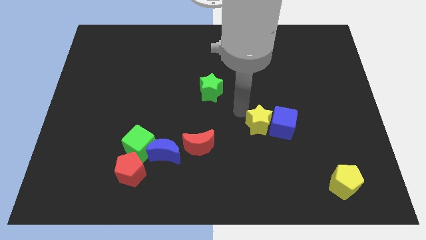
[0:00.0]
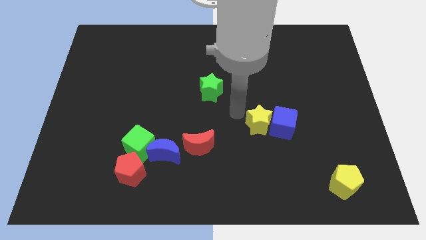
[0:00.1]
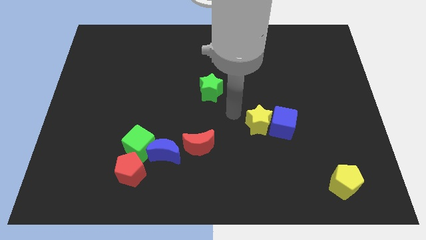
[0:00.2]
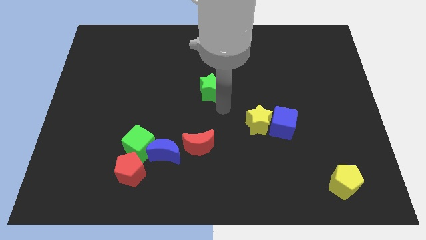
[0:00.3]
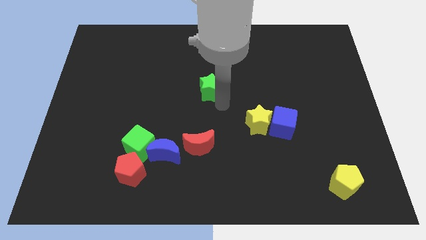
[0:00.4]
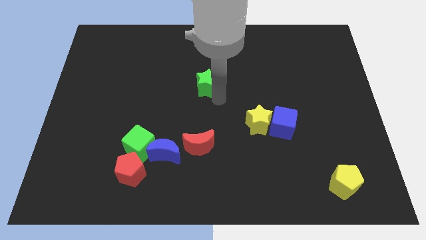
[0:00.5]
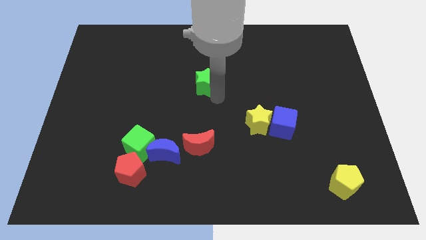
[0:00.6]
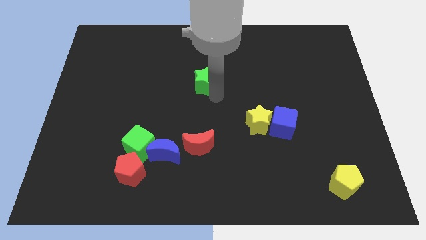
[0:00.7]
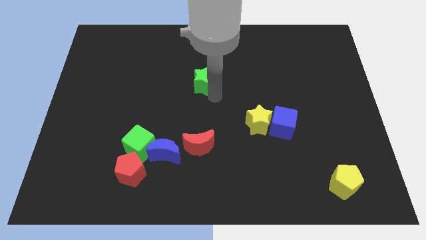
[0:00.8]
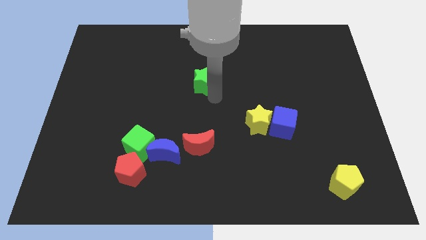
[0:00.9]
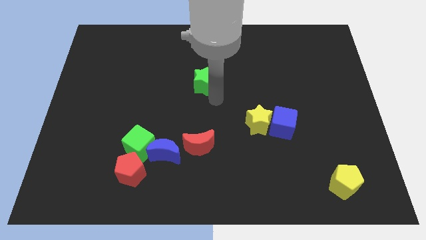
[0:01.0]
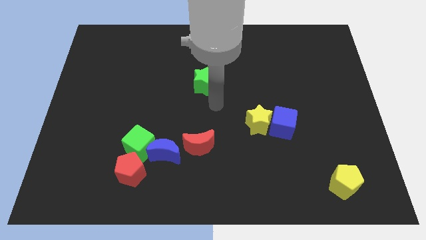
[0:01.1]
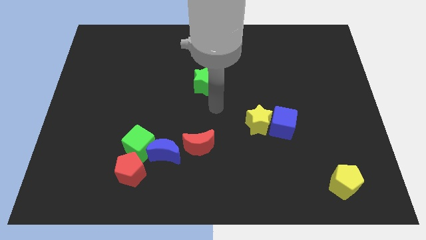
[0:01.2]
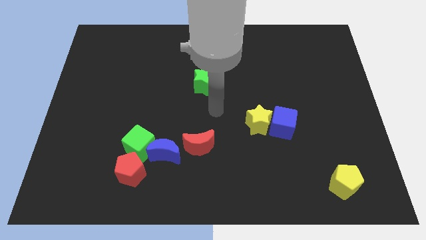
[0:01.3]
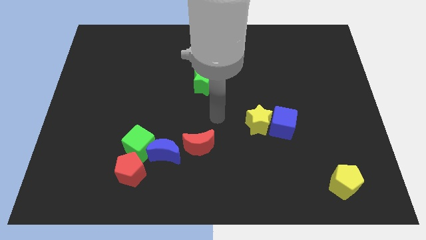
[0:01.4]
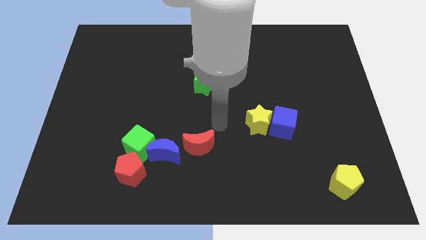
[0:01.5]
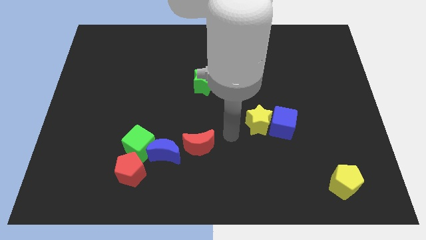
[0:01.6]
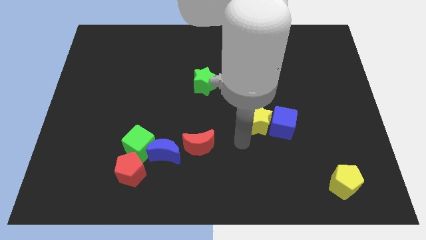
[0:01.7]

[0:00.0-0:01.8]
push the green star slightly to the top side of the board

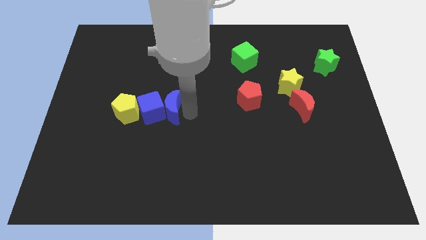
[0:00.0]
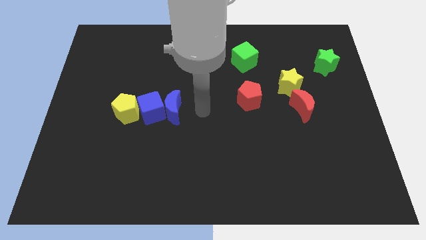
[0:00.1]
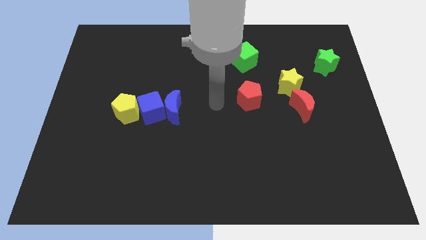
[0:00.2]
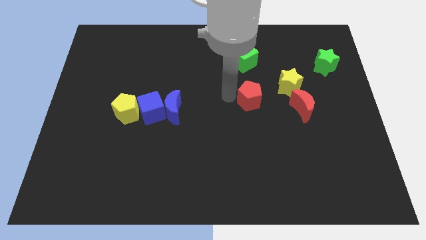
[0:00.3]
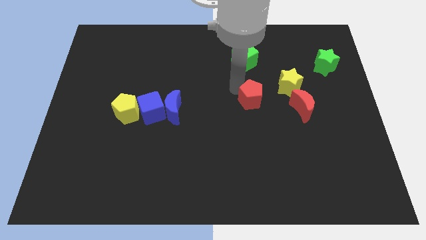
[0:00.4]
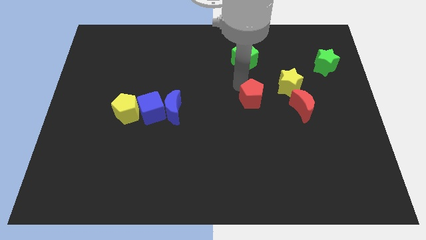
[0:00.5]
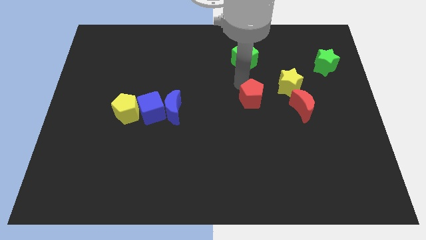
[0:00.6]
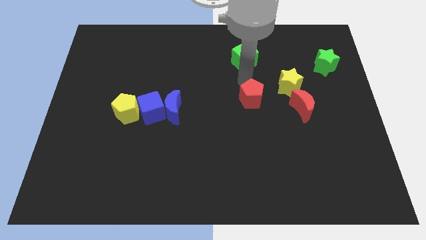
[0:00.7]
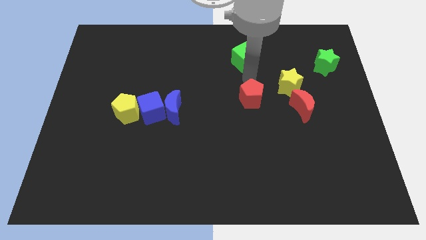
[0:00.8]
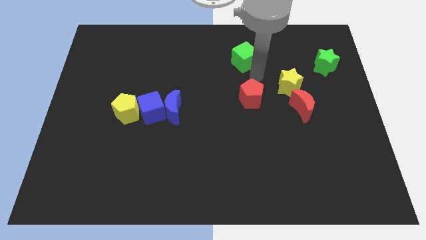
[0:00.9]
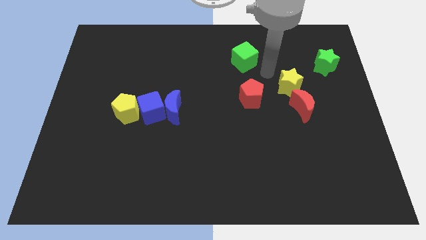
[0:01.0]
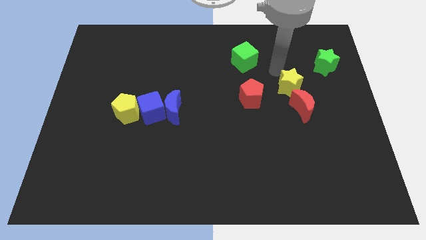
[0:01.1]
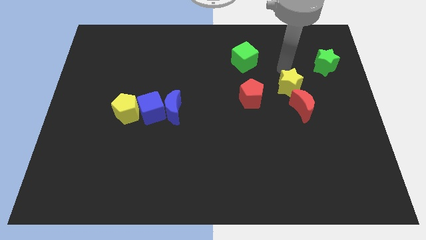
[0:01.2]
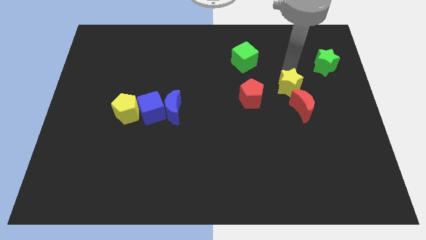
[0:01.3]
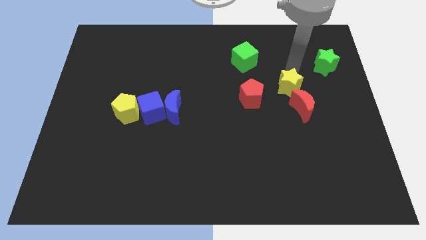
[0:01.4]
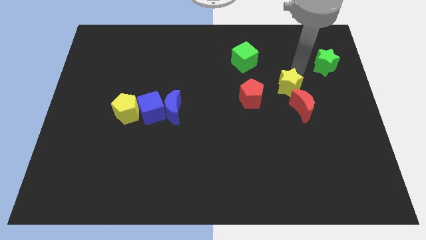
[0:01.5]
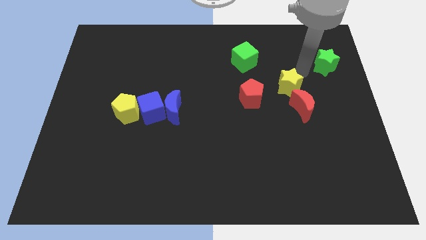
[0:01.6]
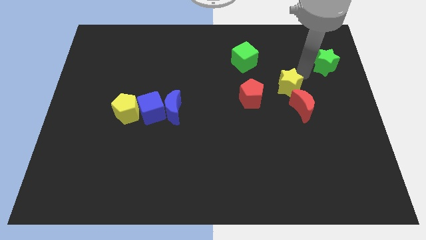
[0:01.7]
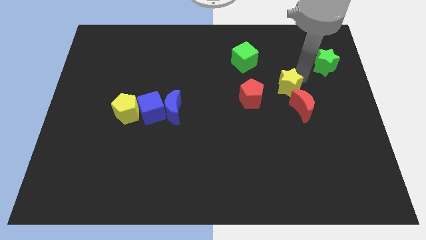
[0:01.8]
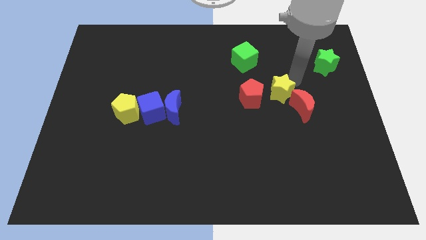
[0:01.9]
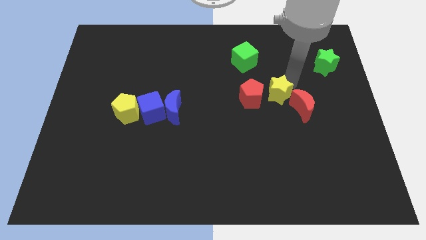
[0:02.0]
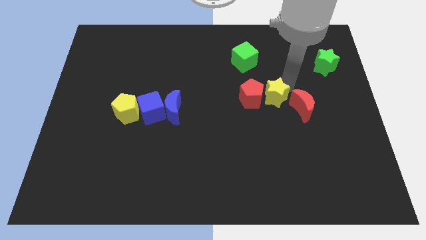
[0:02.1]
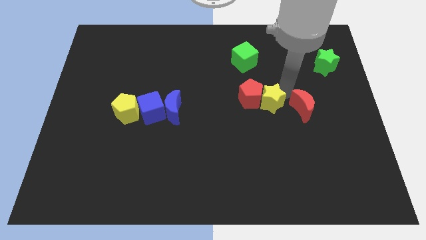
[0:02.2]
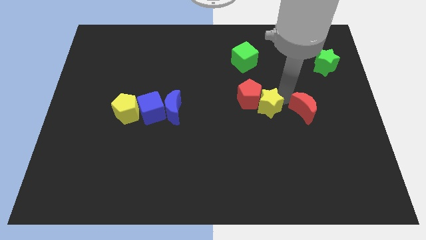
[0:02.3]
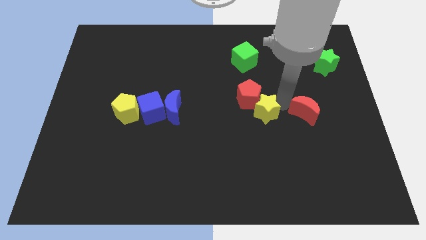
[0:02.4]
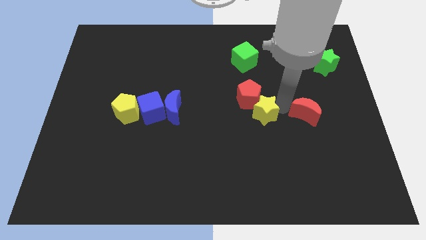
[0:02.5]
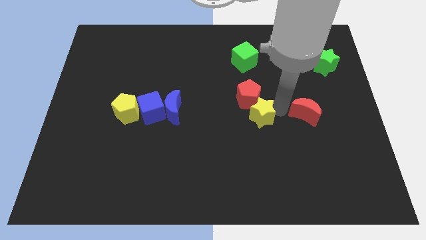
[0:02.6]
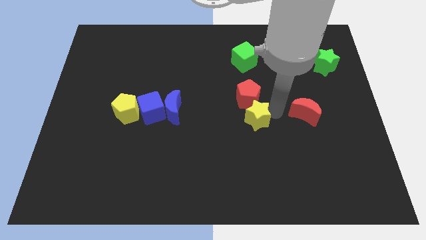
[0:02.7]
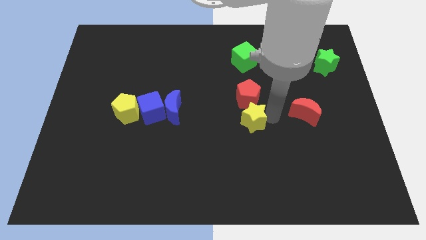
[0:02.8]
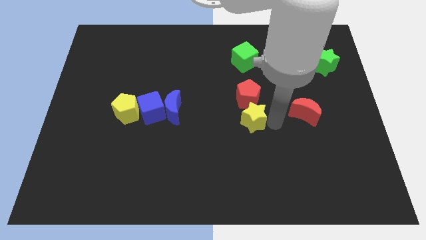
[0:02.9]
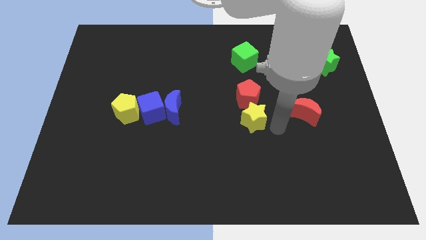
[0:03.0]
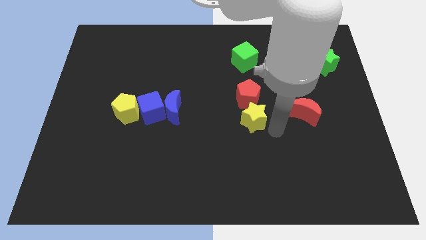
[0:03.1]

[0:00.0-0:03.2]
move the yellow star at the bottom side of the red pentagon

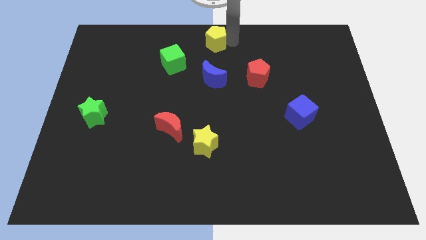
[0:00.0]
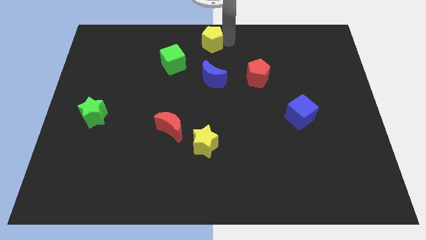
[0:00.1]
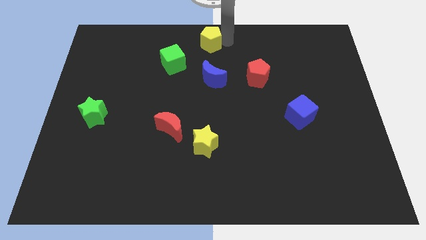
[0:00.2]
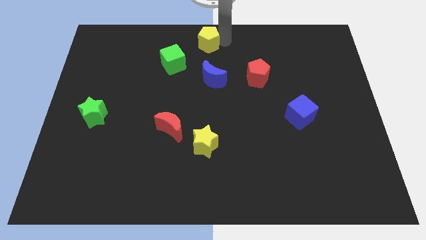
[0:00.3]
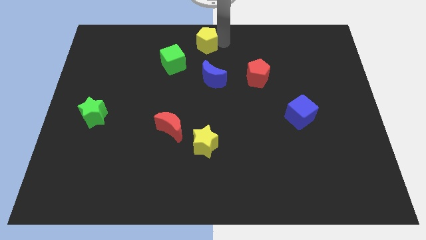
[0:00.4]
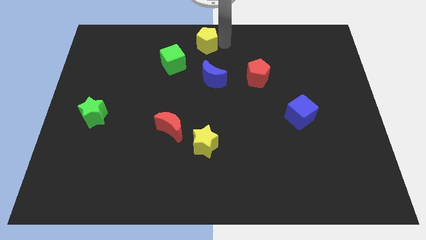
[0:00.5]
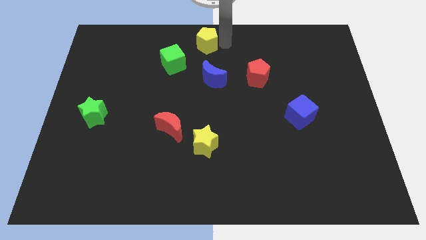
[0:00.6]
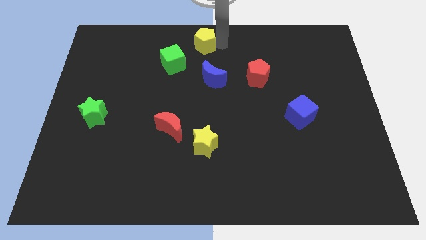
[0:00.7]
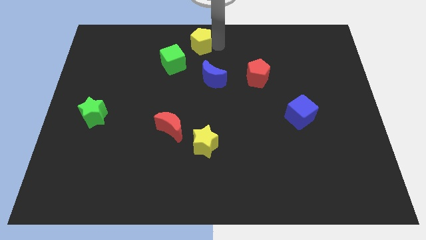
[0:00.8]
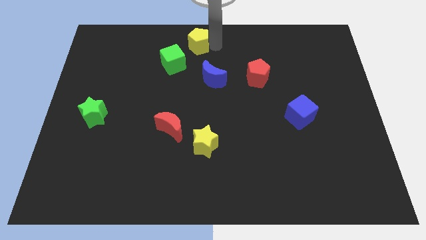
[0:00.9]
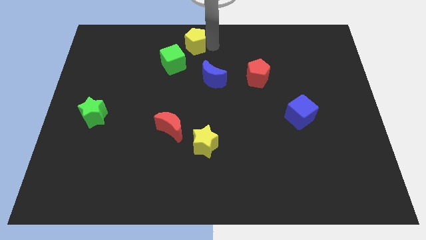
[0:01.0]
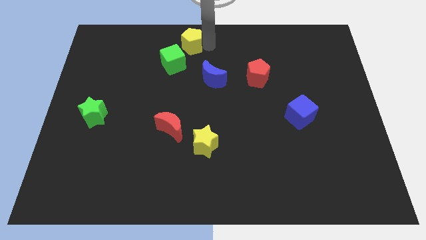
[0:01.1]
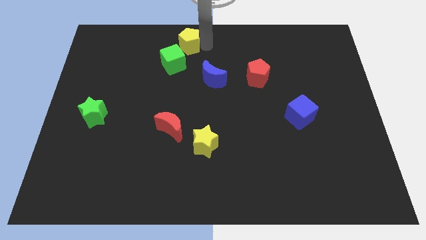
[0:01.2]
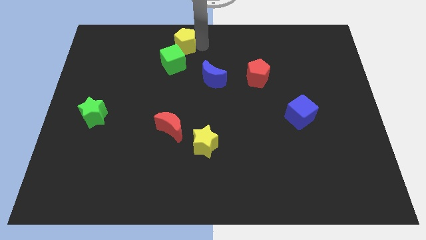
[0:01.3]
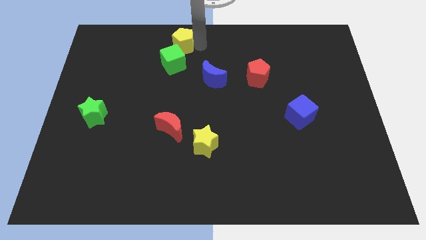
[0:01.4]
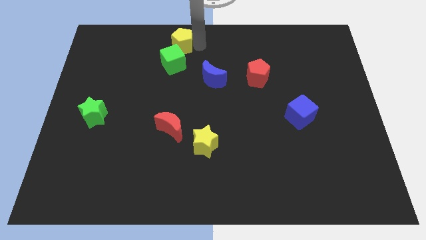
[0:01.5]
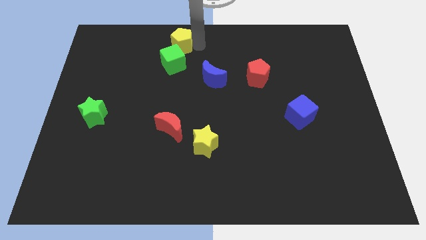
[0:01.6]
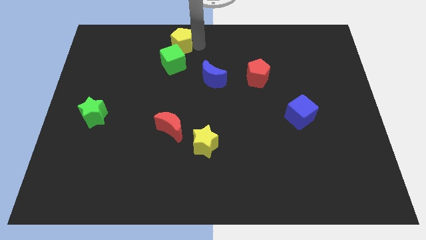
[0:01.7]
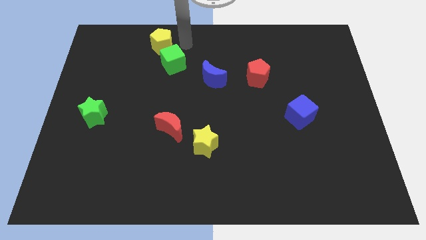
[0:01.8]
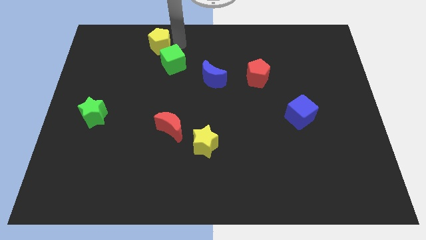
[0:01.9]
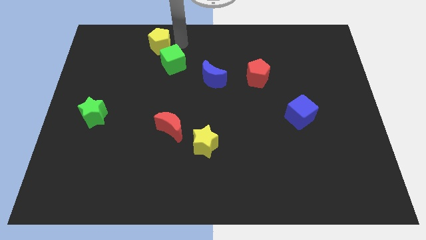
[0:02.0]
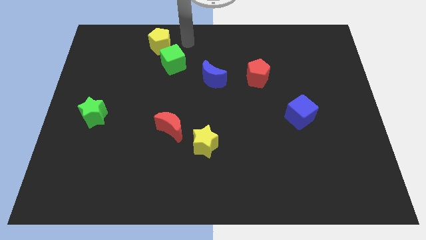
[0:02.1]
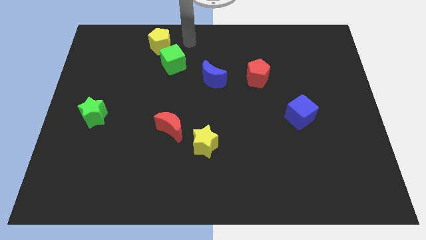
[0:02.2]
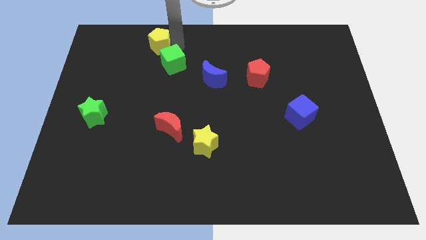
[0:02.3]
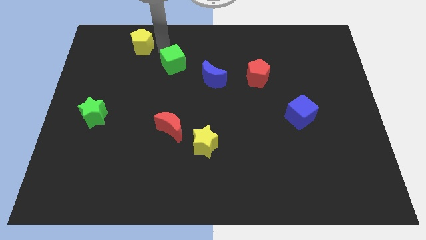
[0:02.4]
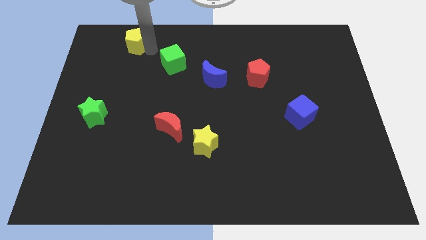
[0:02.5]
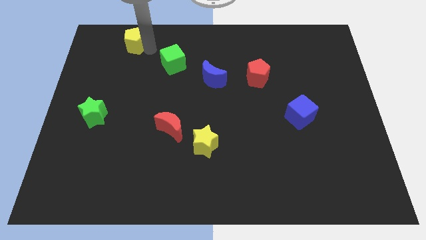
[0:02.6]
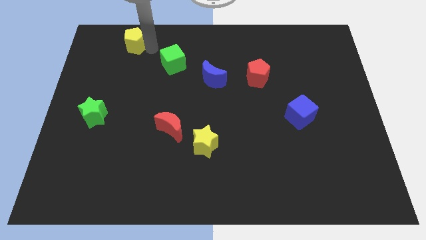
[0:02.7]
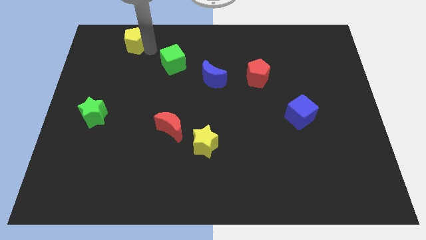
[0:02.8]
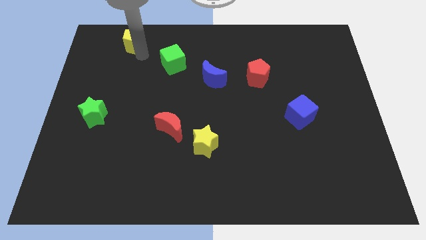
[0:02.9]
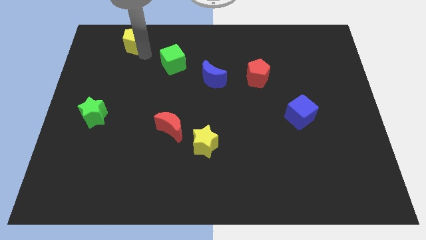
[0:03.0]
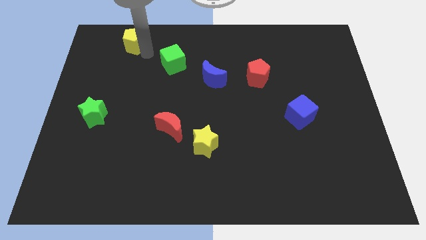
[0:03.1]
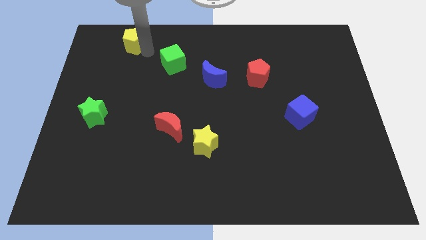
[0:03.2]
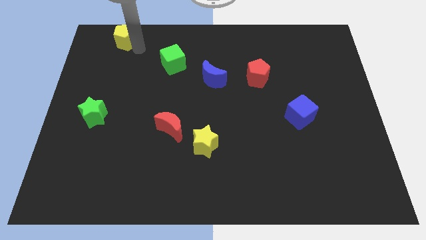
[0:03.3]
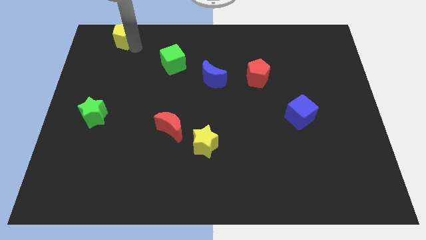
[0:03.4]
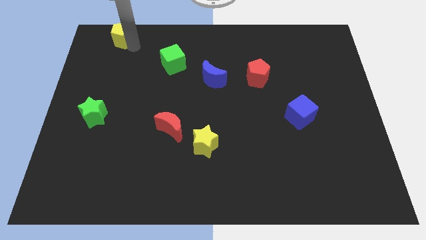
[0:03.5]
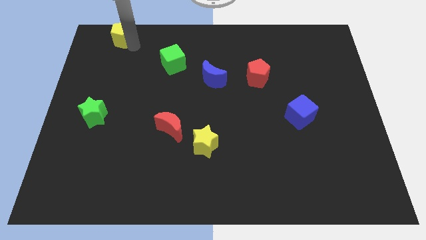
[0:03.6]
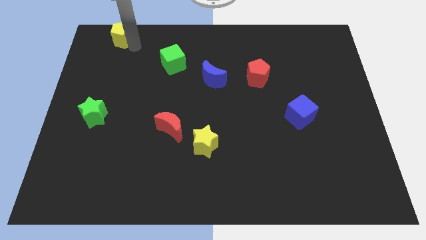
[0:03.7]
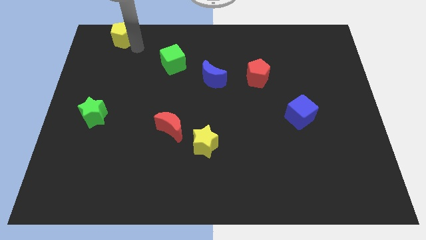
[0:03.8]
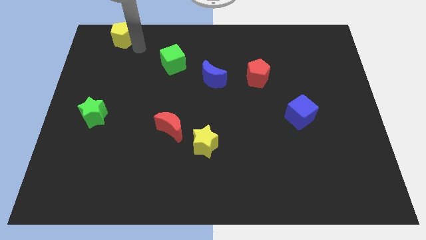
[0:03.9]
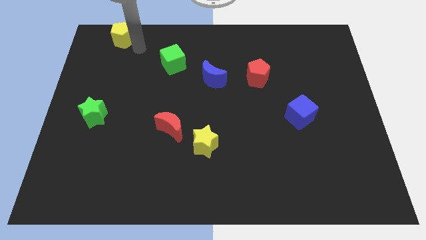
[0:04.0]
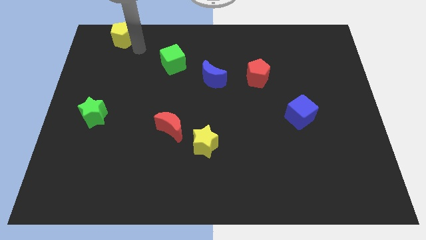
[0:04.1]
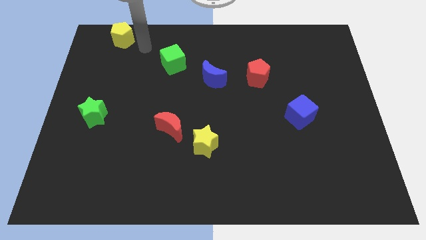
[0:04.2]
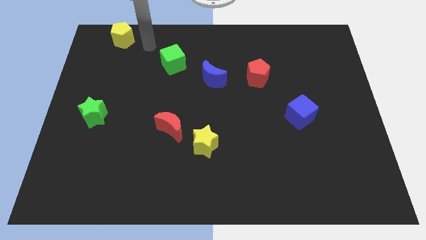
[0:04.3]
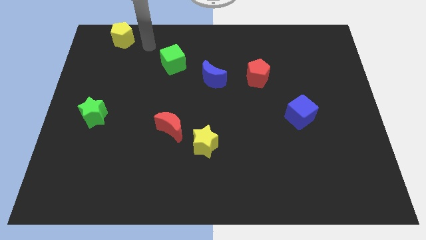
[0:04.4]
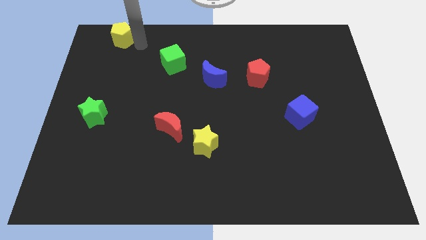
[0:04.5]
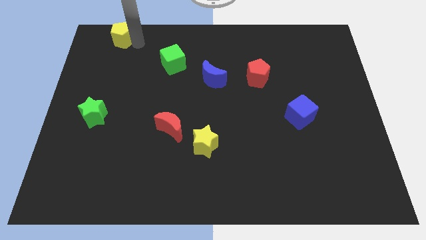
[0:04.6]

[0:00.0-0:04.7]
push the yellow pentagon diagonally on the top left side of the green cube
